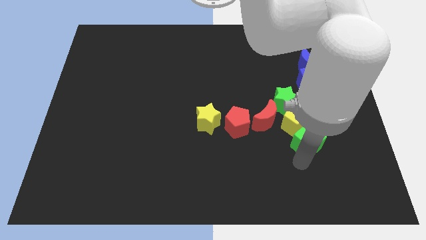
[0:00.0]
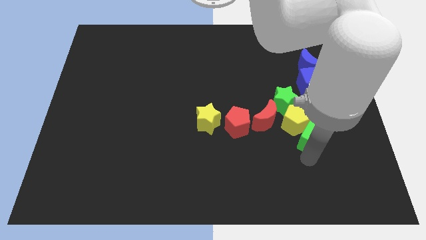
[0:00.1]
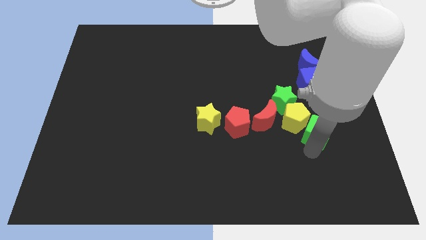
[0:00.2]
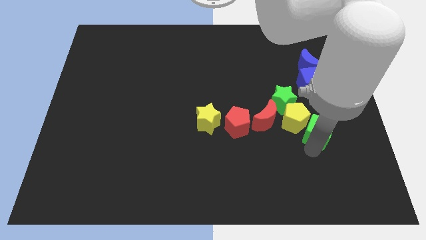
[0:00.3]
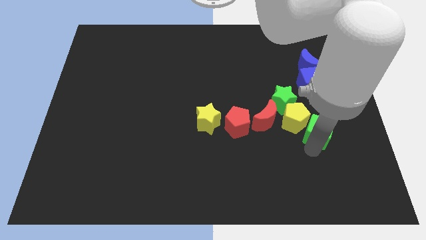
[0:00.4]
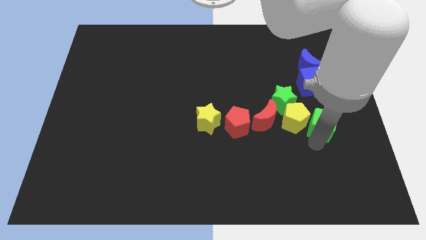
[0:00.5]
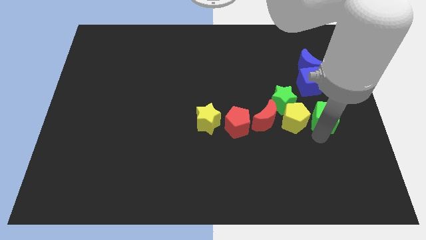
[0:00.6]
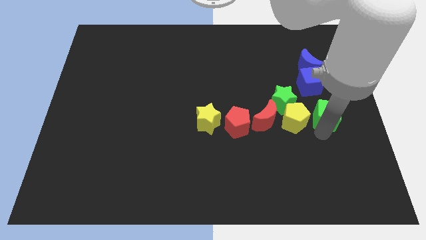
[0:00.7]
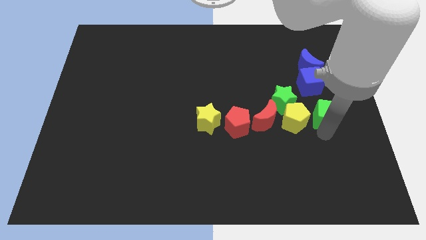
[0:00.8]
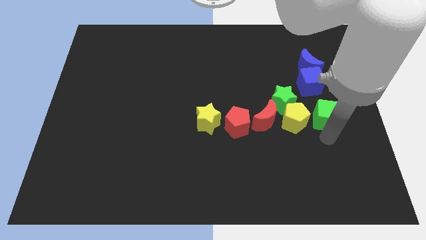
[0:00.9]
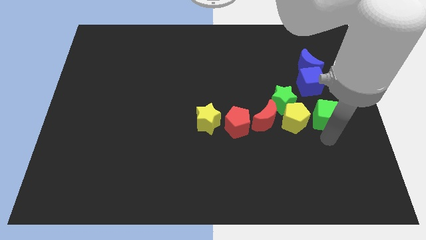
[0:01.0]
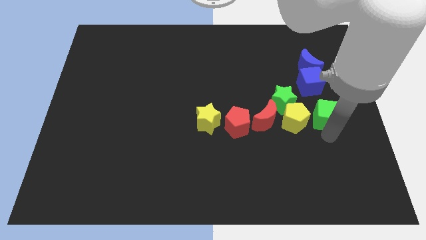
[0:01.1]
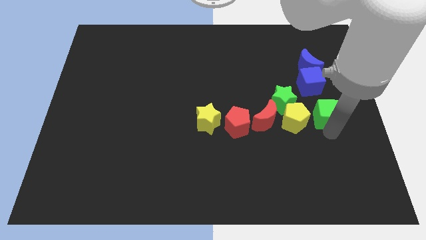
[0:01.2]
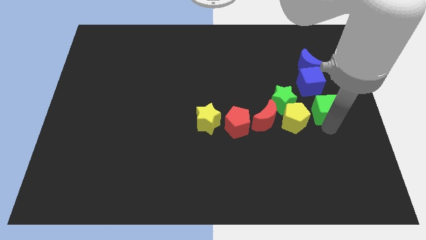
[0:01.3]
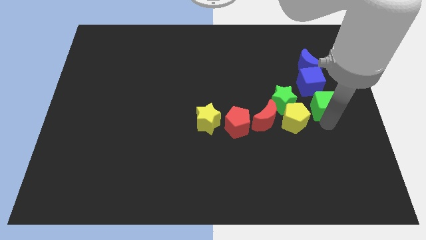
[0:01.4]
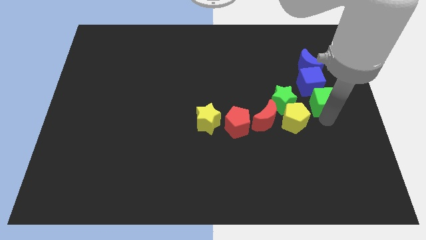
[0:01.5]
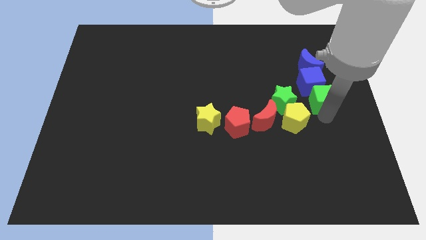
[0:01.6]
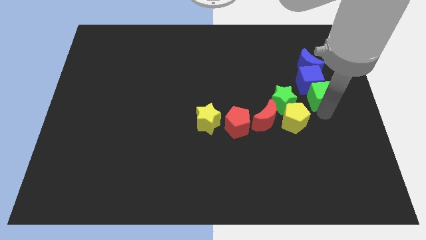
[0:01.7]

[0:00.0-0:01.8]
push the green cube into the blue cube

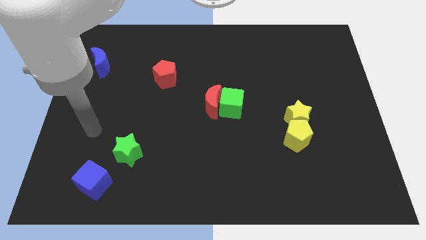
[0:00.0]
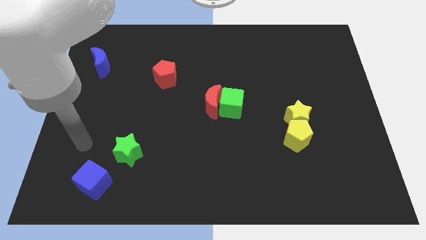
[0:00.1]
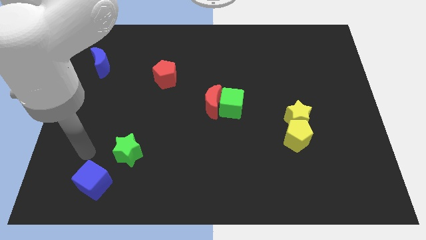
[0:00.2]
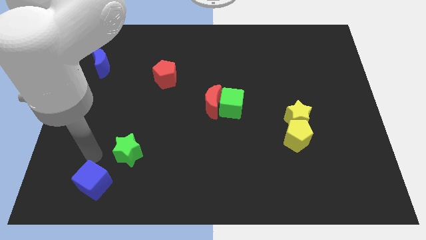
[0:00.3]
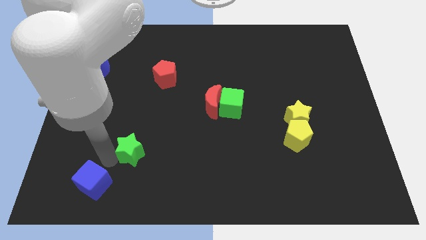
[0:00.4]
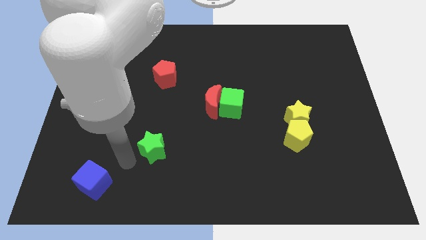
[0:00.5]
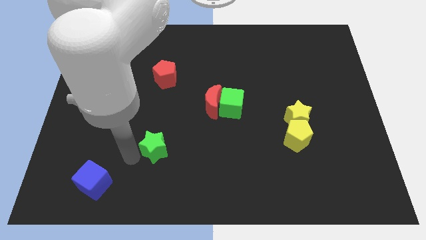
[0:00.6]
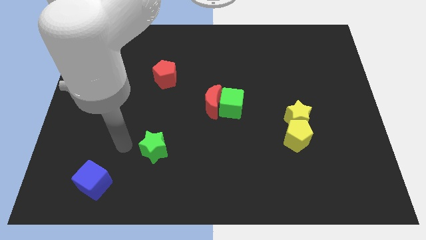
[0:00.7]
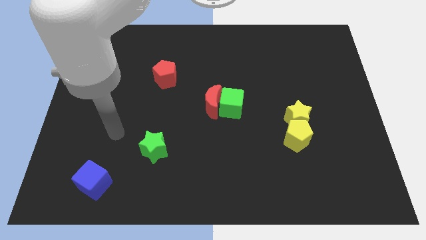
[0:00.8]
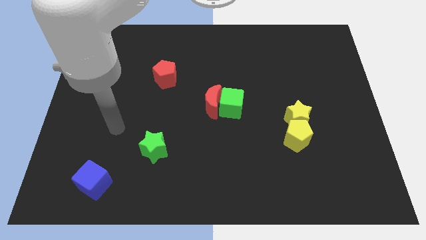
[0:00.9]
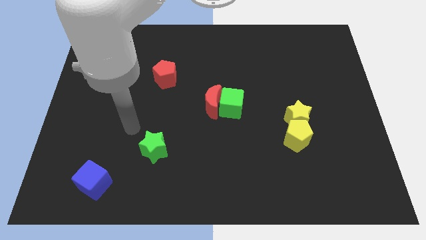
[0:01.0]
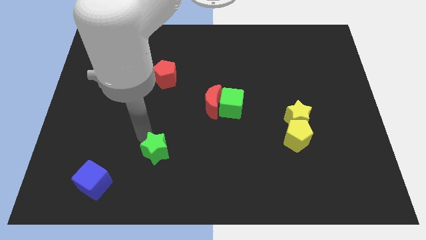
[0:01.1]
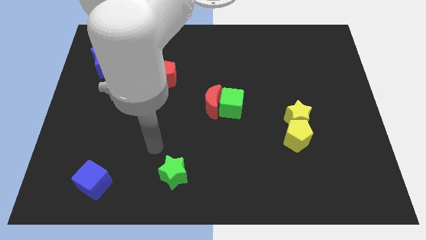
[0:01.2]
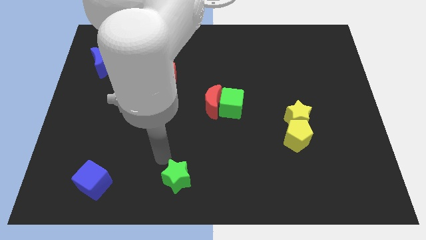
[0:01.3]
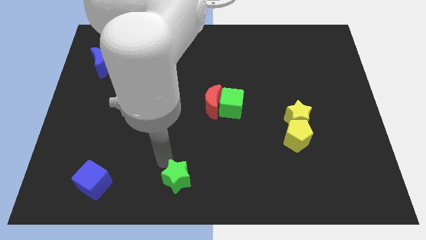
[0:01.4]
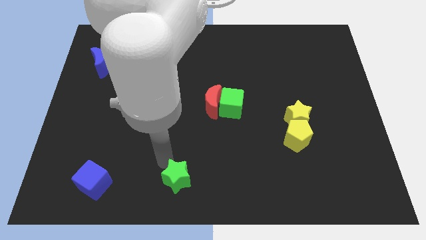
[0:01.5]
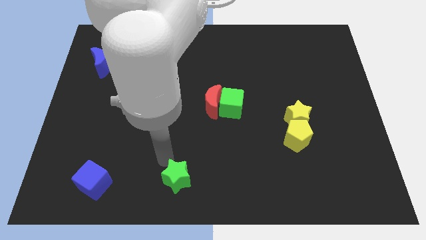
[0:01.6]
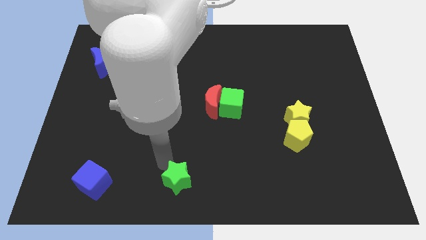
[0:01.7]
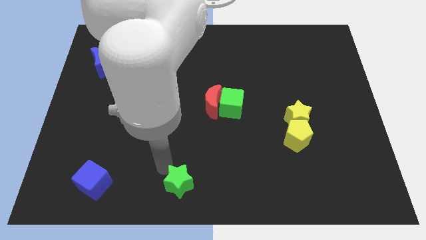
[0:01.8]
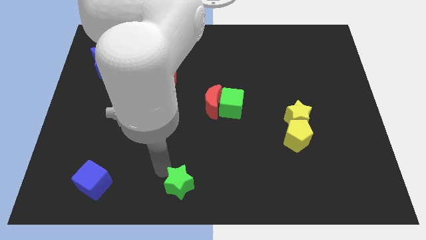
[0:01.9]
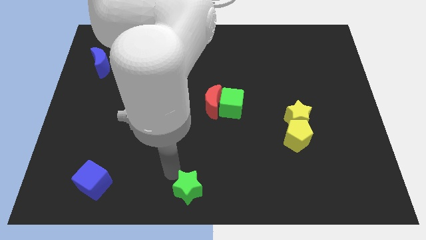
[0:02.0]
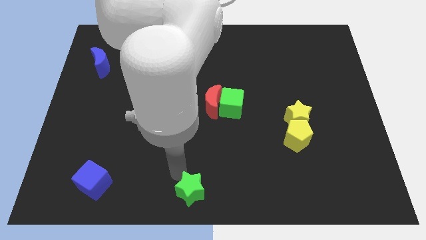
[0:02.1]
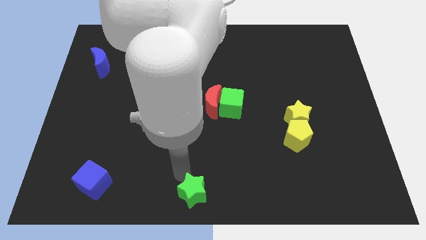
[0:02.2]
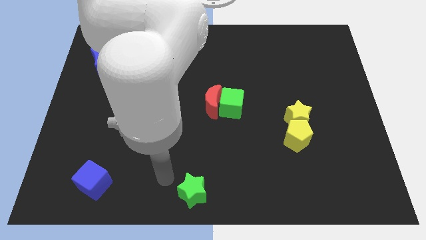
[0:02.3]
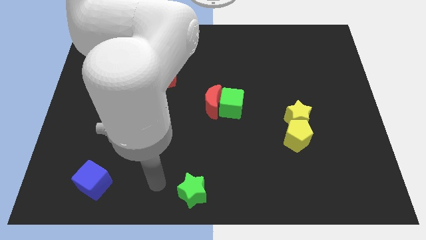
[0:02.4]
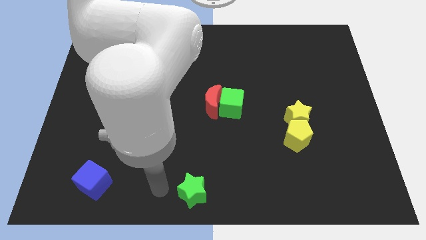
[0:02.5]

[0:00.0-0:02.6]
move the green star to the bottom centre of the board

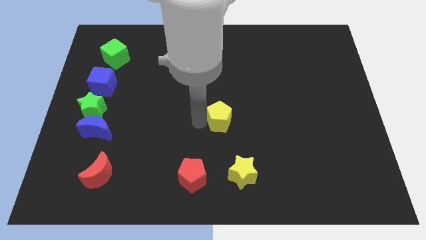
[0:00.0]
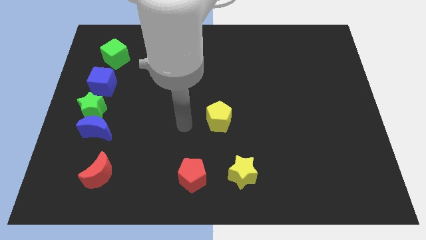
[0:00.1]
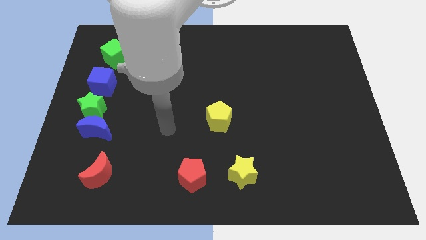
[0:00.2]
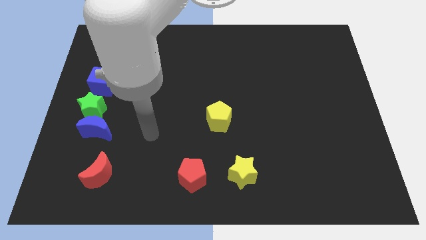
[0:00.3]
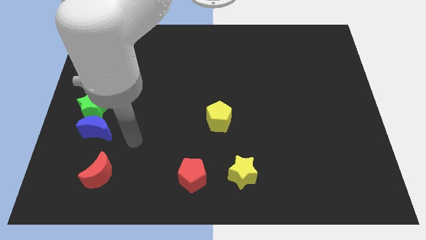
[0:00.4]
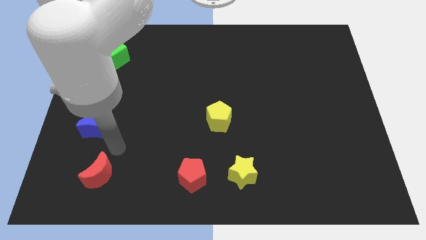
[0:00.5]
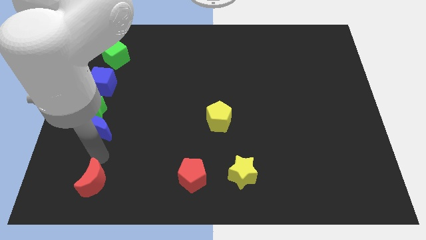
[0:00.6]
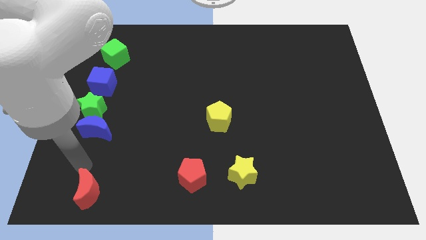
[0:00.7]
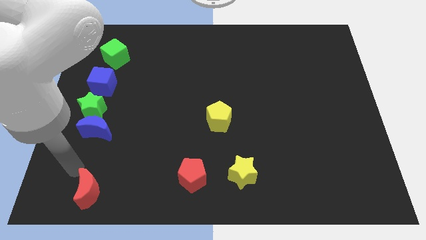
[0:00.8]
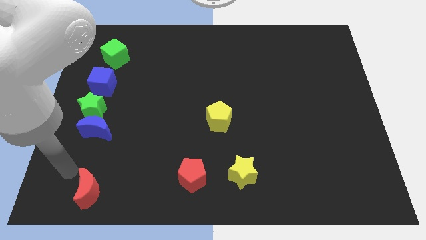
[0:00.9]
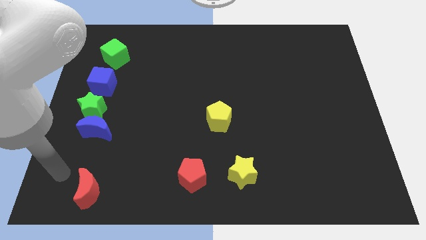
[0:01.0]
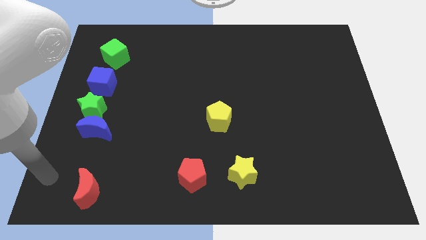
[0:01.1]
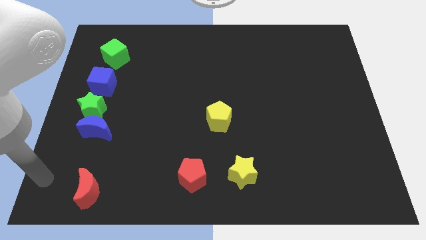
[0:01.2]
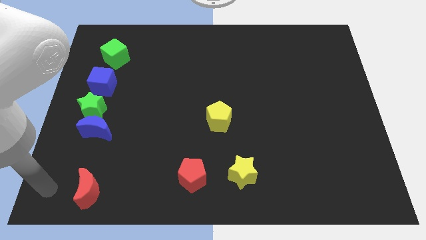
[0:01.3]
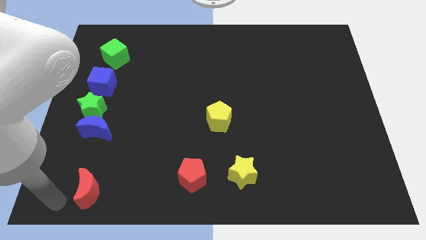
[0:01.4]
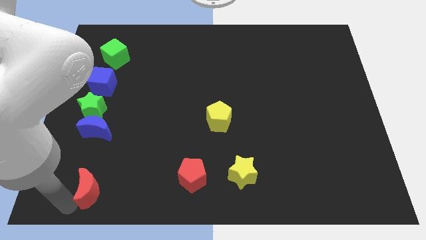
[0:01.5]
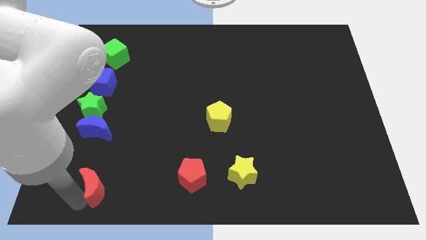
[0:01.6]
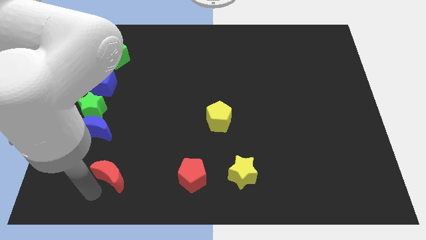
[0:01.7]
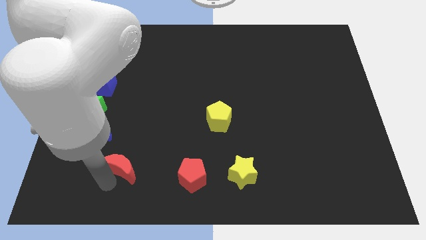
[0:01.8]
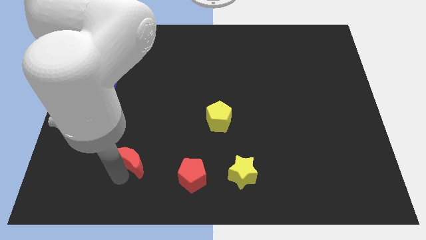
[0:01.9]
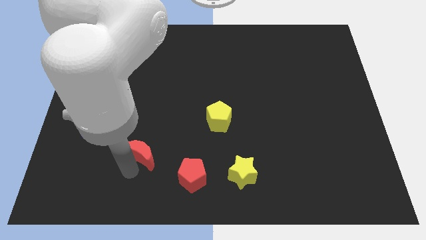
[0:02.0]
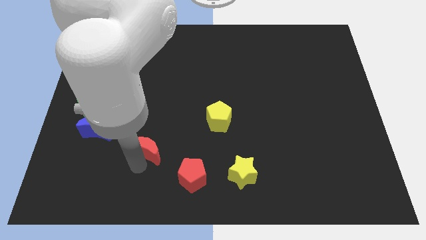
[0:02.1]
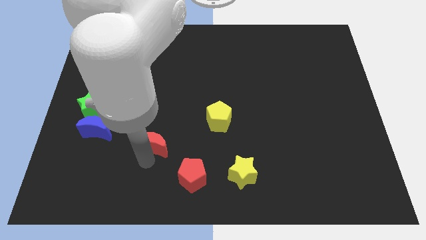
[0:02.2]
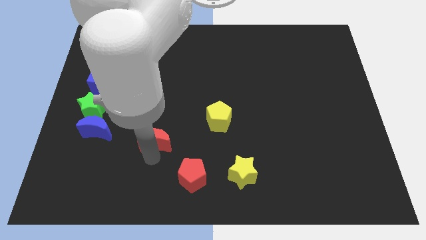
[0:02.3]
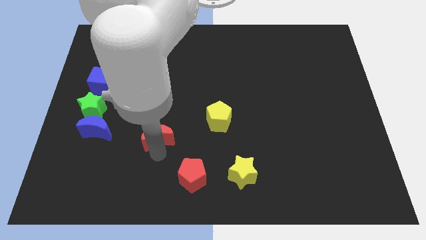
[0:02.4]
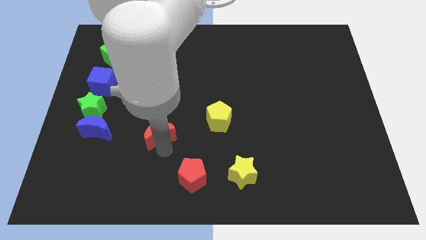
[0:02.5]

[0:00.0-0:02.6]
place the red moon right to the blue moon

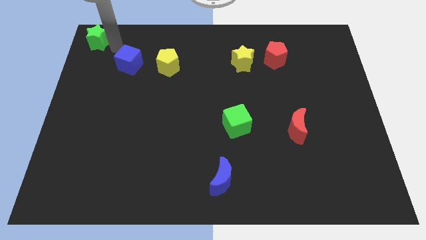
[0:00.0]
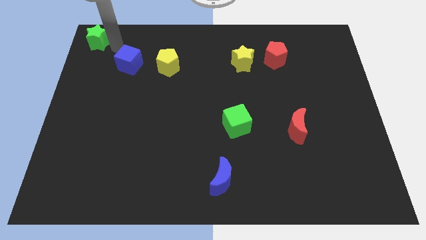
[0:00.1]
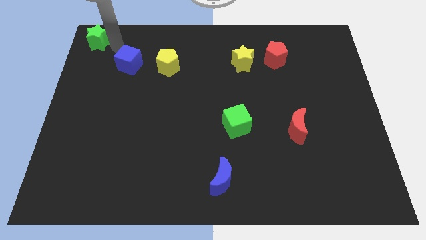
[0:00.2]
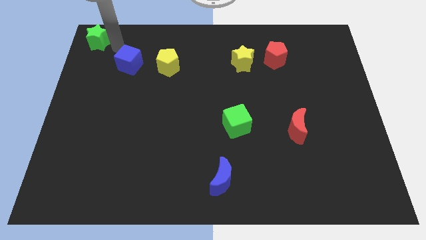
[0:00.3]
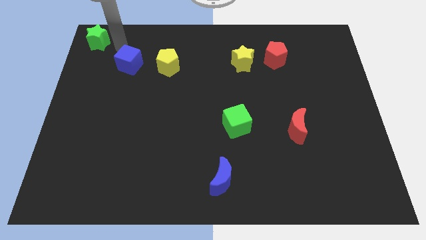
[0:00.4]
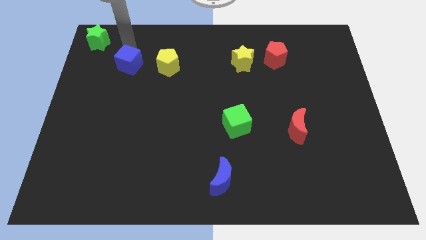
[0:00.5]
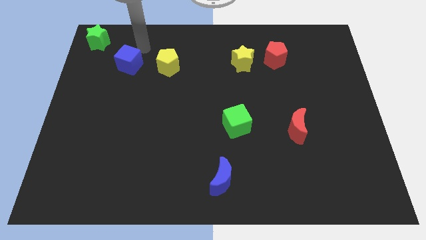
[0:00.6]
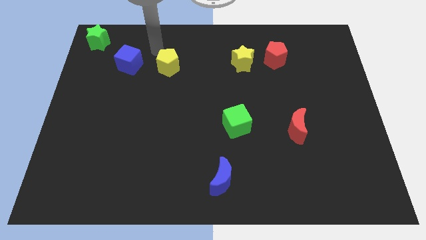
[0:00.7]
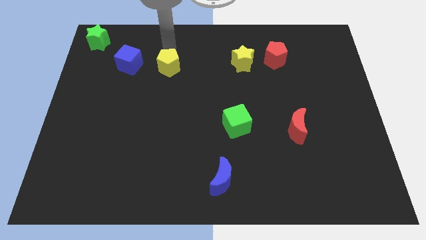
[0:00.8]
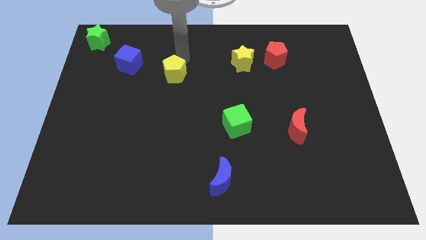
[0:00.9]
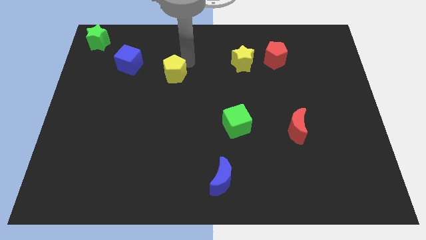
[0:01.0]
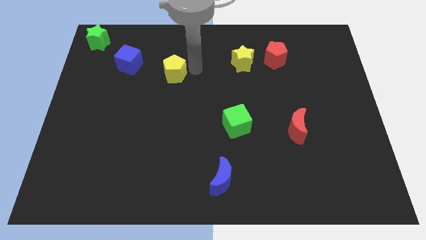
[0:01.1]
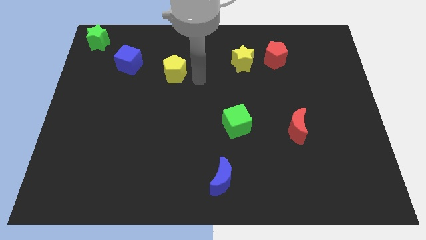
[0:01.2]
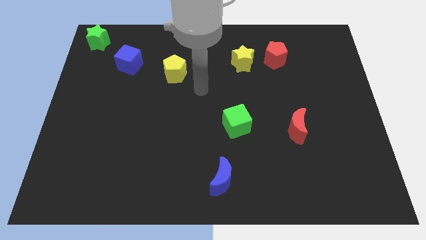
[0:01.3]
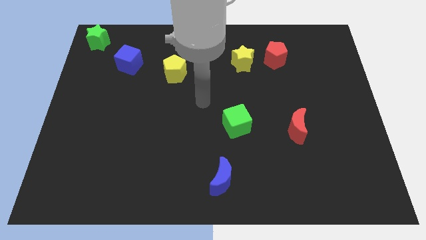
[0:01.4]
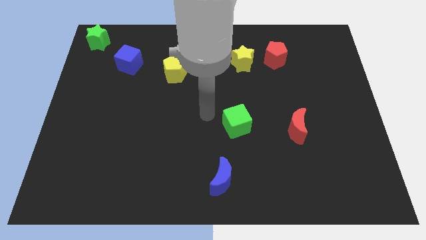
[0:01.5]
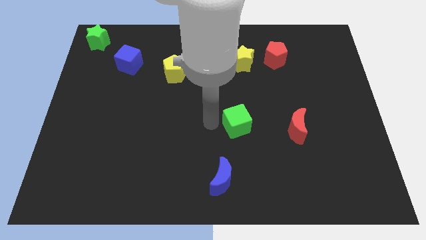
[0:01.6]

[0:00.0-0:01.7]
move your arm away from the green star

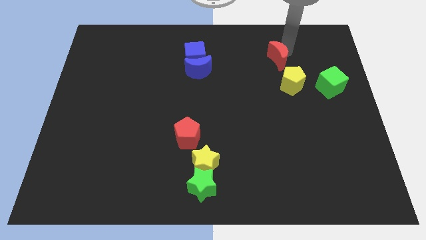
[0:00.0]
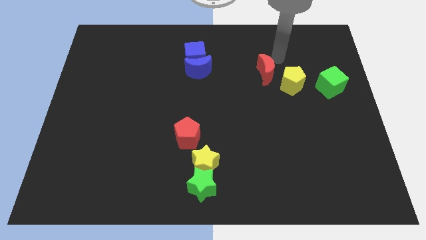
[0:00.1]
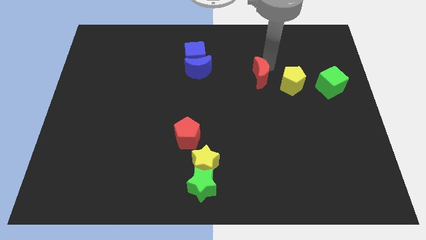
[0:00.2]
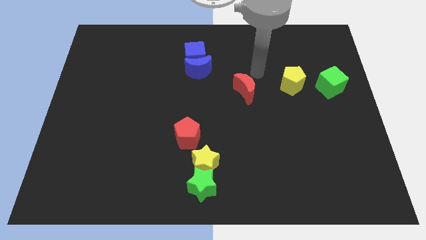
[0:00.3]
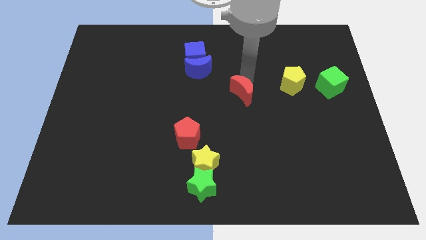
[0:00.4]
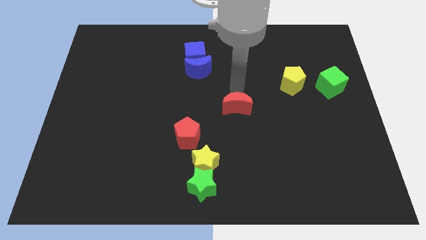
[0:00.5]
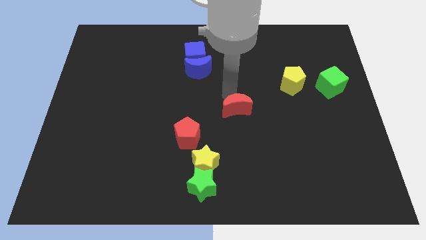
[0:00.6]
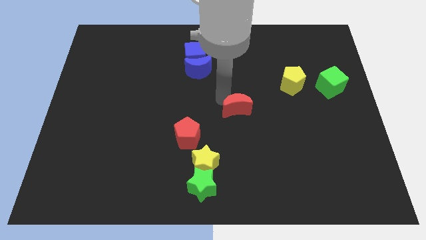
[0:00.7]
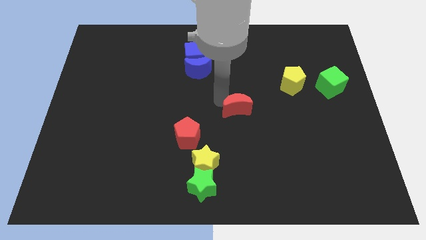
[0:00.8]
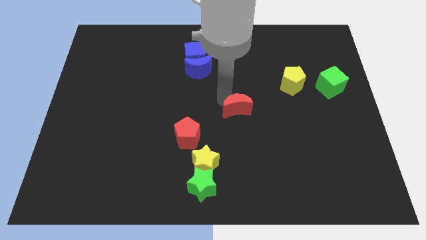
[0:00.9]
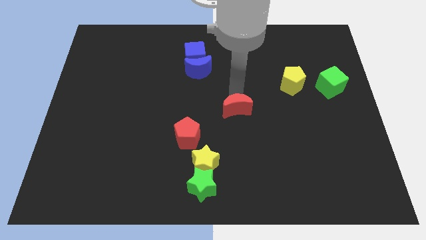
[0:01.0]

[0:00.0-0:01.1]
move the red moon to the center
